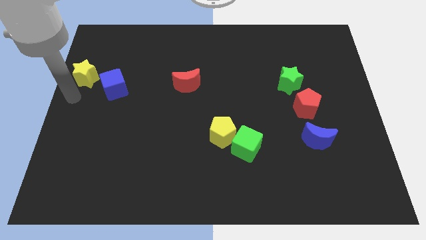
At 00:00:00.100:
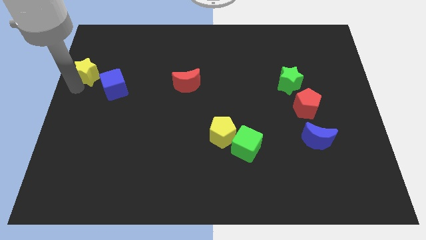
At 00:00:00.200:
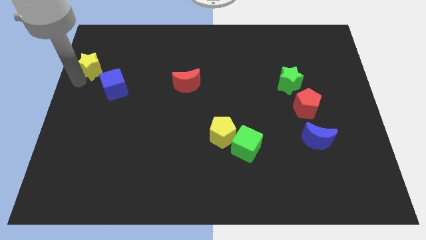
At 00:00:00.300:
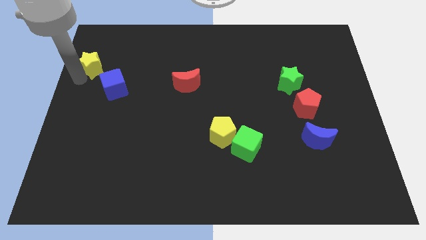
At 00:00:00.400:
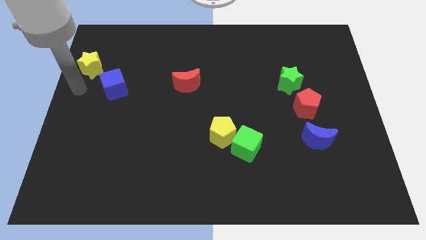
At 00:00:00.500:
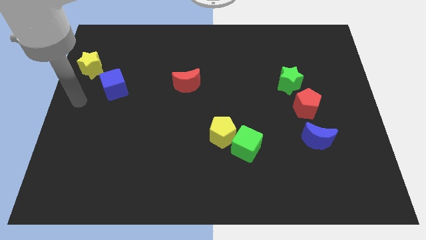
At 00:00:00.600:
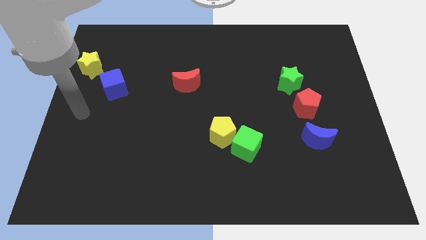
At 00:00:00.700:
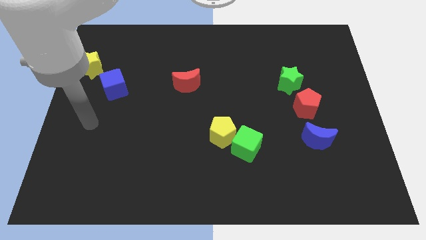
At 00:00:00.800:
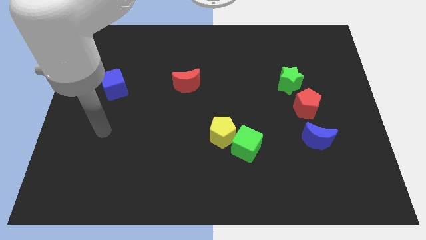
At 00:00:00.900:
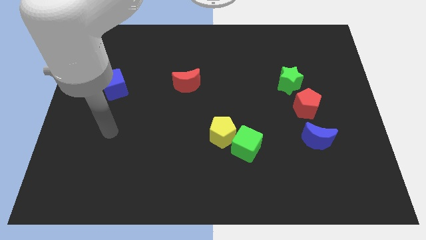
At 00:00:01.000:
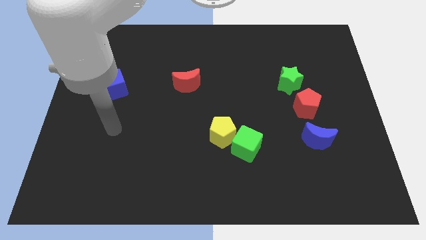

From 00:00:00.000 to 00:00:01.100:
place the yellow star to the top left of the blue cube

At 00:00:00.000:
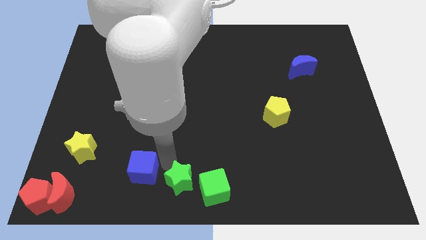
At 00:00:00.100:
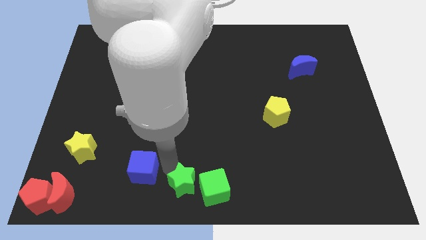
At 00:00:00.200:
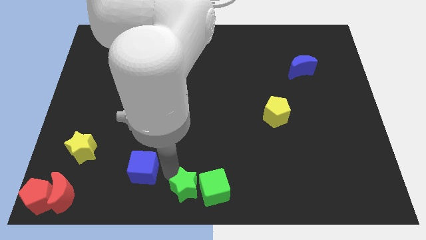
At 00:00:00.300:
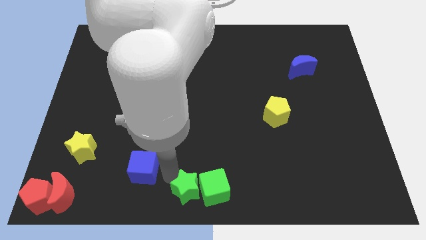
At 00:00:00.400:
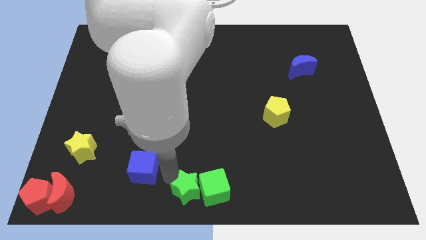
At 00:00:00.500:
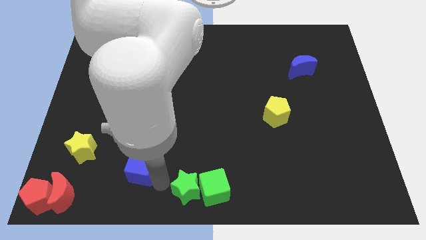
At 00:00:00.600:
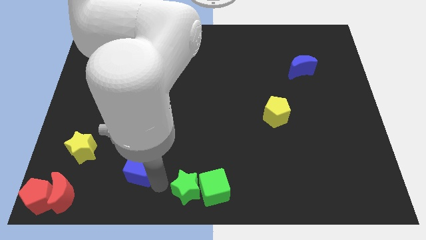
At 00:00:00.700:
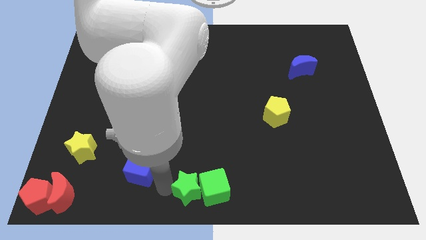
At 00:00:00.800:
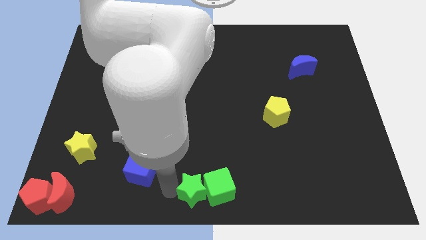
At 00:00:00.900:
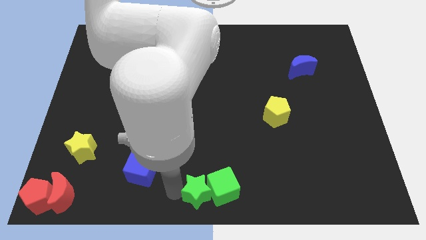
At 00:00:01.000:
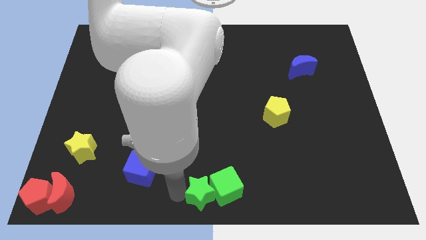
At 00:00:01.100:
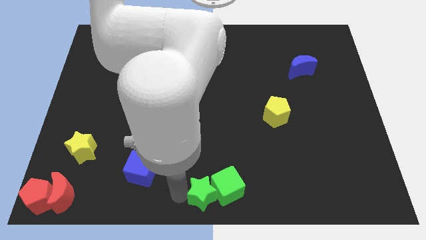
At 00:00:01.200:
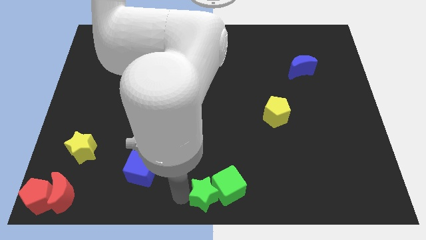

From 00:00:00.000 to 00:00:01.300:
place the green star left to the green cube

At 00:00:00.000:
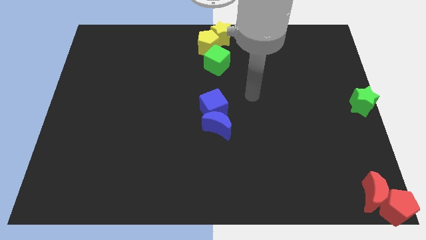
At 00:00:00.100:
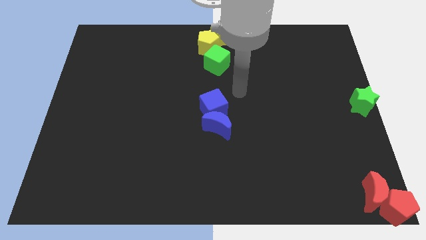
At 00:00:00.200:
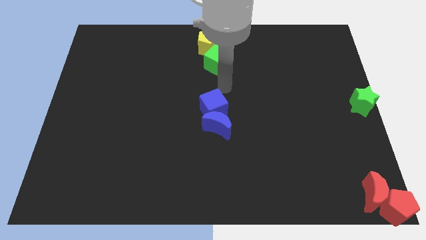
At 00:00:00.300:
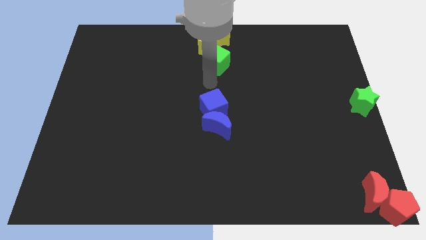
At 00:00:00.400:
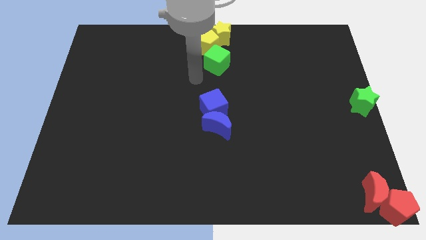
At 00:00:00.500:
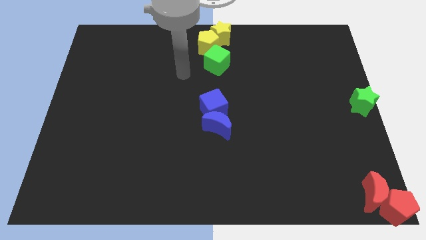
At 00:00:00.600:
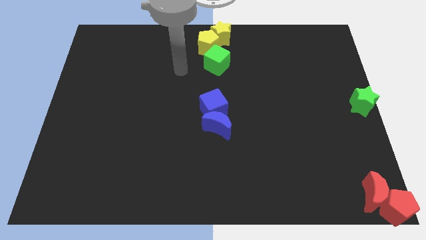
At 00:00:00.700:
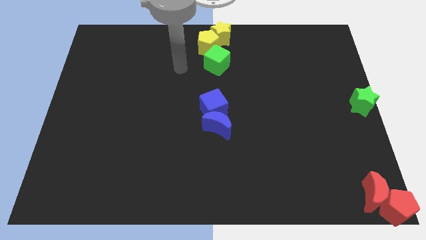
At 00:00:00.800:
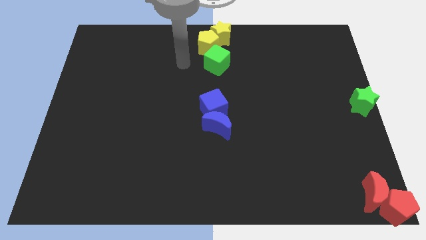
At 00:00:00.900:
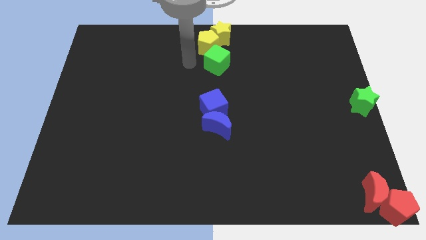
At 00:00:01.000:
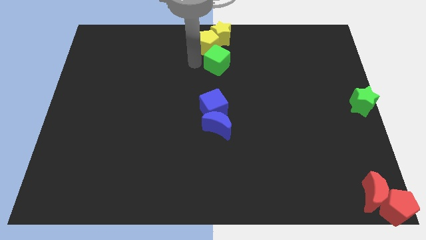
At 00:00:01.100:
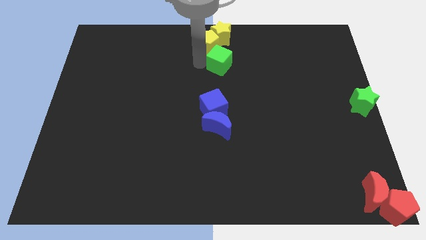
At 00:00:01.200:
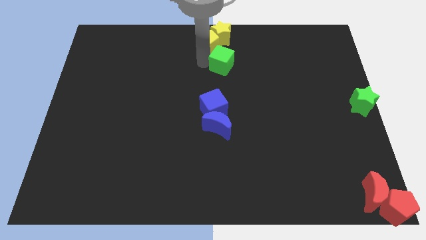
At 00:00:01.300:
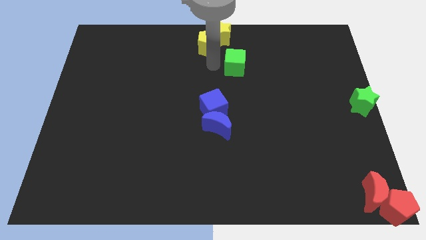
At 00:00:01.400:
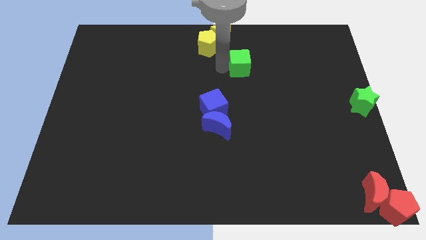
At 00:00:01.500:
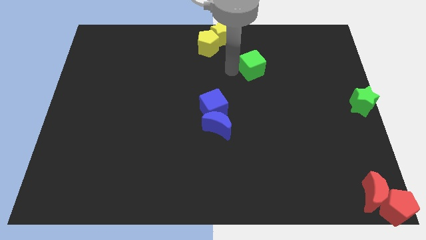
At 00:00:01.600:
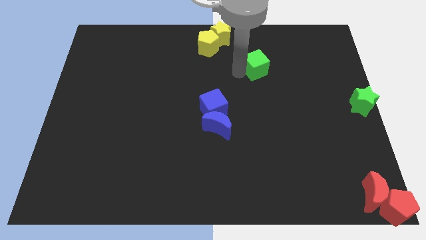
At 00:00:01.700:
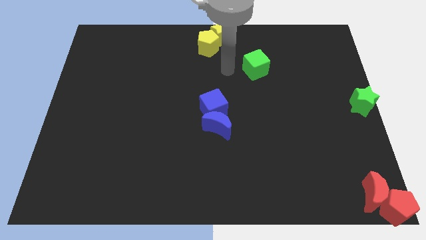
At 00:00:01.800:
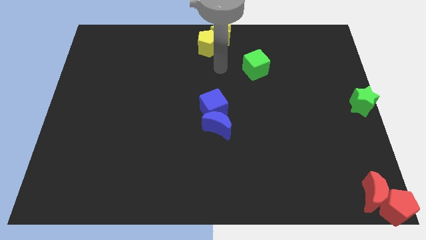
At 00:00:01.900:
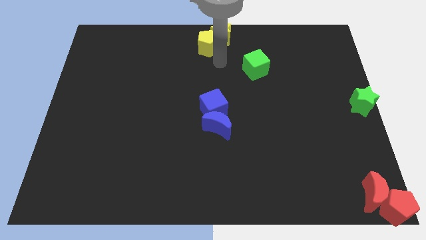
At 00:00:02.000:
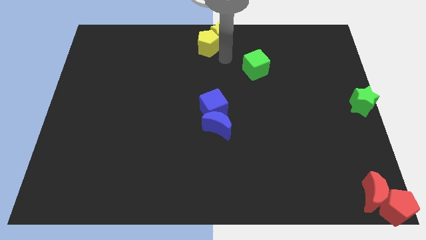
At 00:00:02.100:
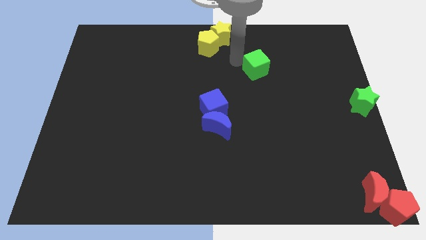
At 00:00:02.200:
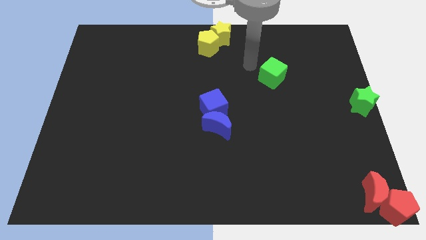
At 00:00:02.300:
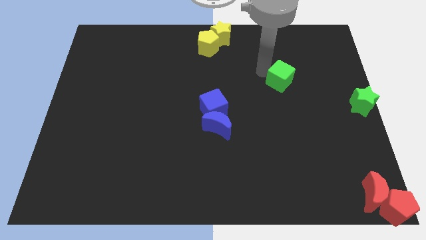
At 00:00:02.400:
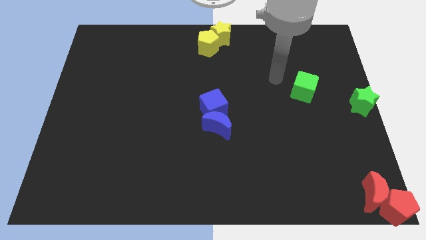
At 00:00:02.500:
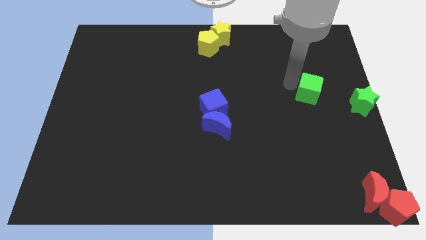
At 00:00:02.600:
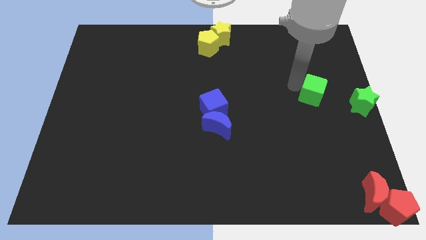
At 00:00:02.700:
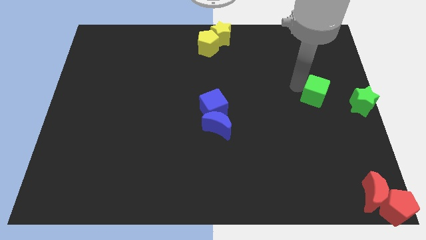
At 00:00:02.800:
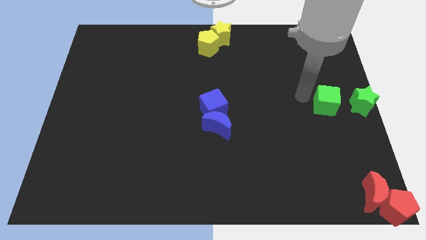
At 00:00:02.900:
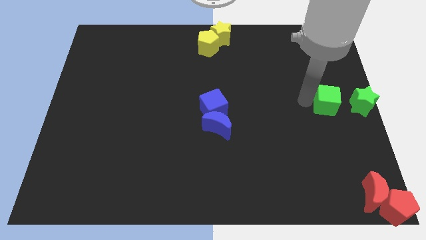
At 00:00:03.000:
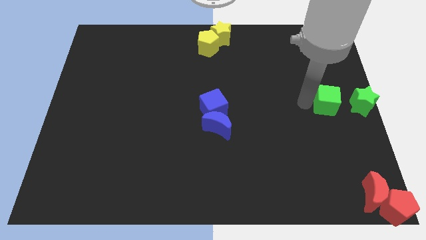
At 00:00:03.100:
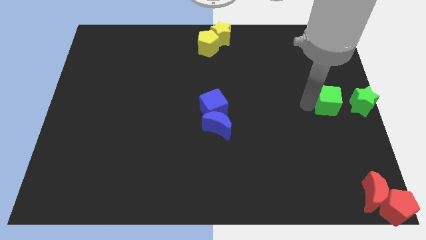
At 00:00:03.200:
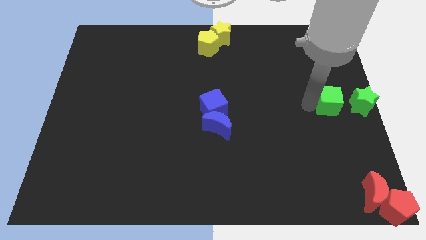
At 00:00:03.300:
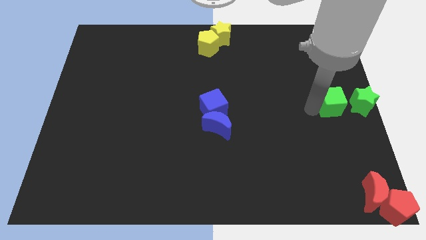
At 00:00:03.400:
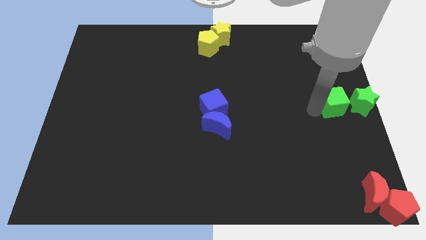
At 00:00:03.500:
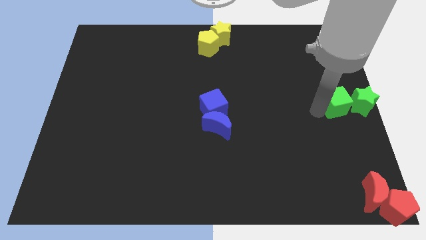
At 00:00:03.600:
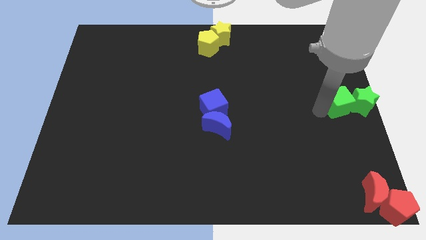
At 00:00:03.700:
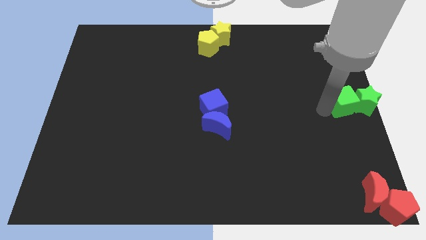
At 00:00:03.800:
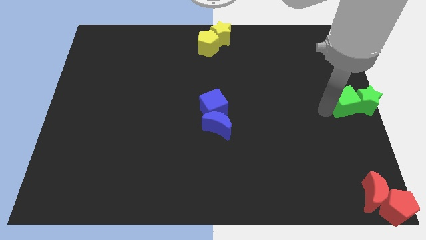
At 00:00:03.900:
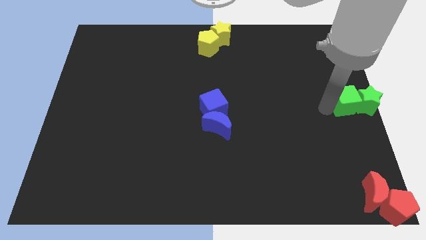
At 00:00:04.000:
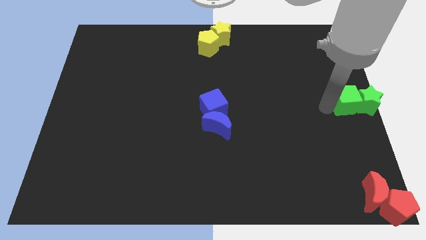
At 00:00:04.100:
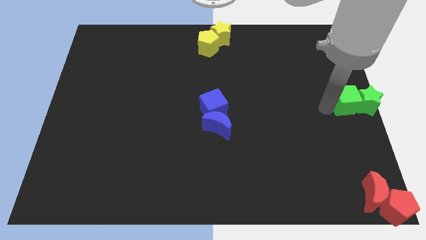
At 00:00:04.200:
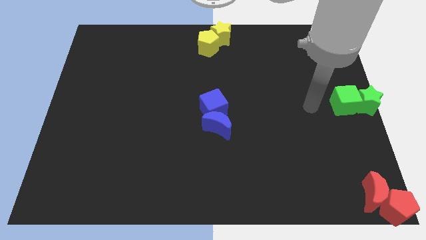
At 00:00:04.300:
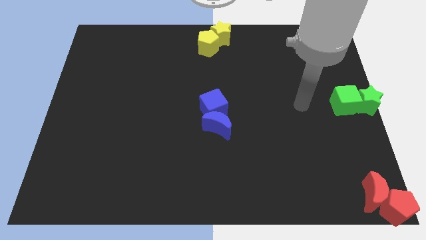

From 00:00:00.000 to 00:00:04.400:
slightly push the green cube into green star
